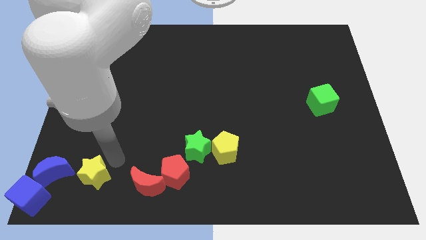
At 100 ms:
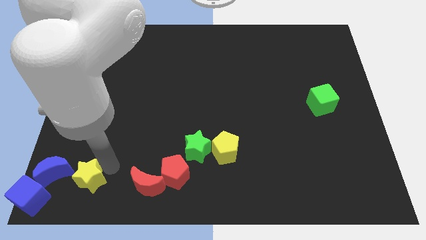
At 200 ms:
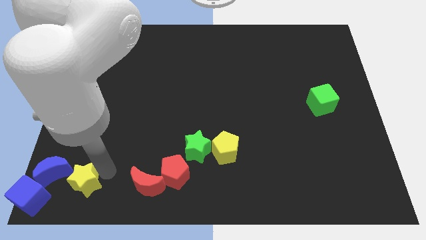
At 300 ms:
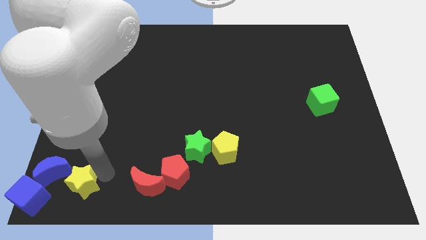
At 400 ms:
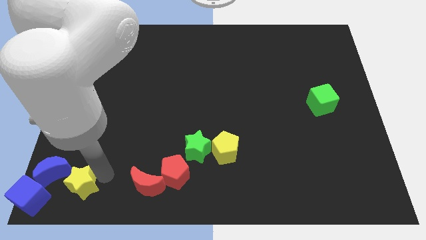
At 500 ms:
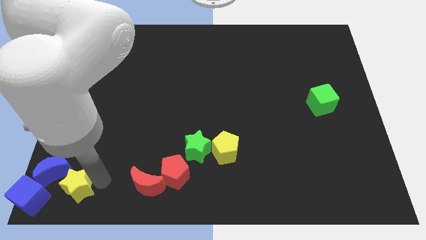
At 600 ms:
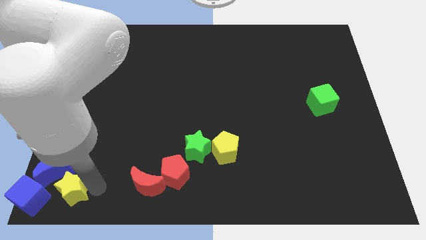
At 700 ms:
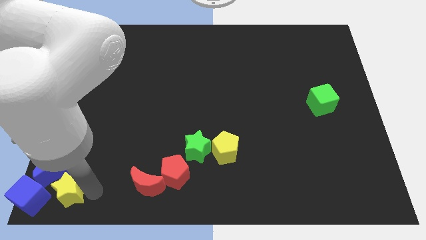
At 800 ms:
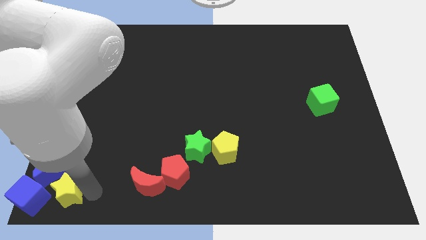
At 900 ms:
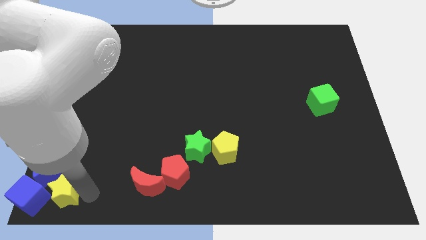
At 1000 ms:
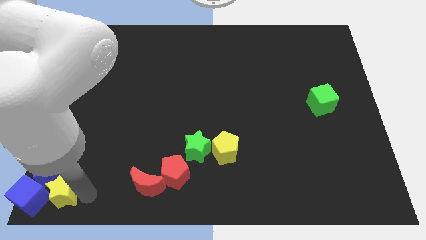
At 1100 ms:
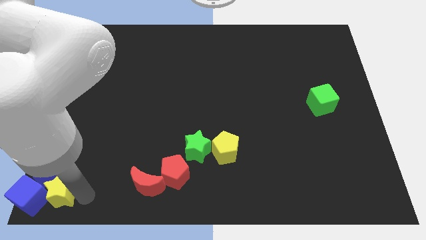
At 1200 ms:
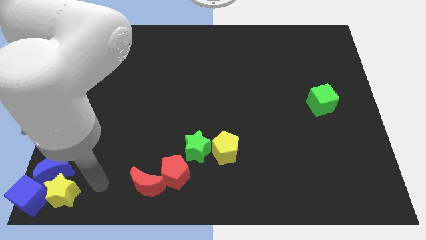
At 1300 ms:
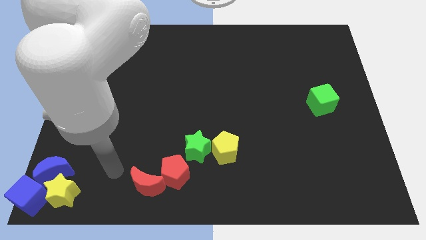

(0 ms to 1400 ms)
place the yellow star at the bottom left corner

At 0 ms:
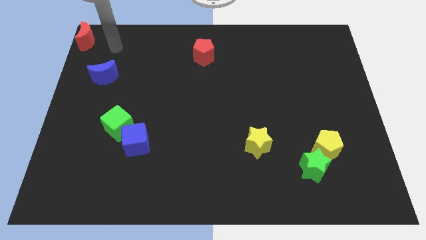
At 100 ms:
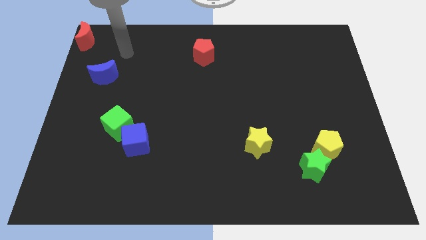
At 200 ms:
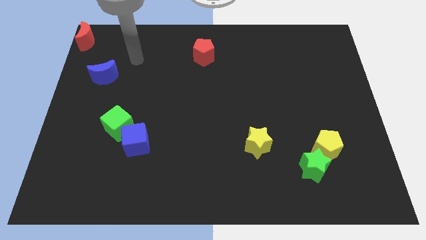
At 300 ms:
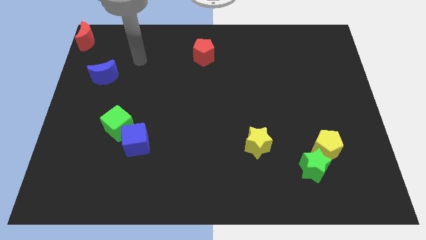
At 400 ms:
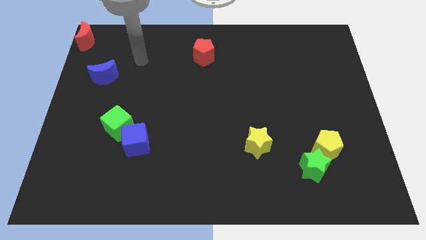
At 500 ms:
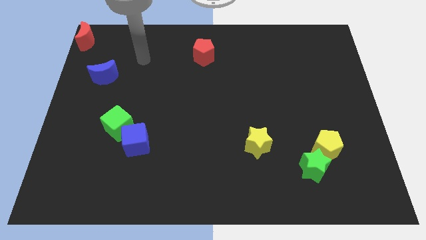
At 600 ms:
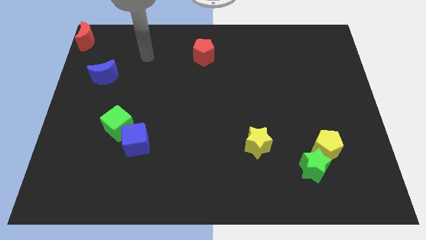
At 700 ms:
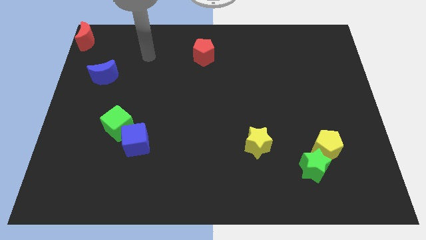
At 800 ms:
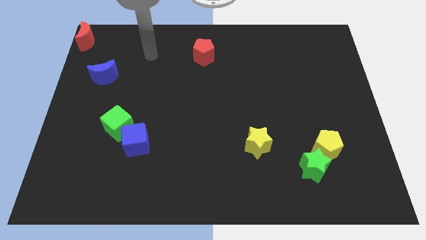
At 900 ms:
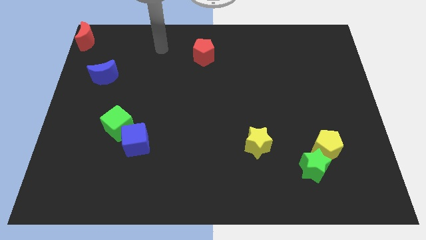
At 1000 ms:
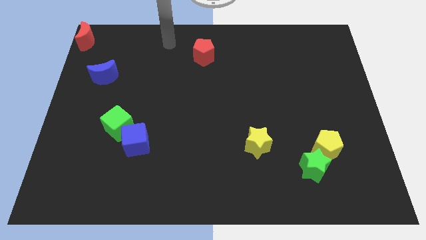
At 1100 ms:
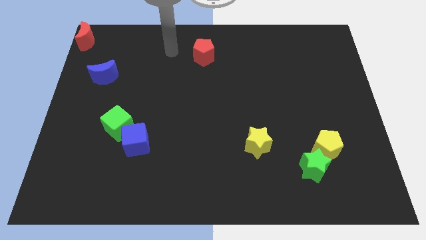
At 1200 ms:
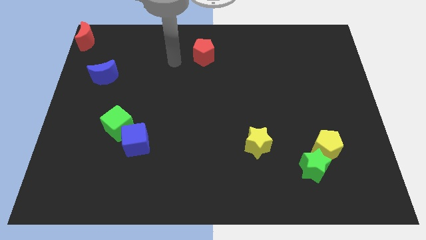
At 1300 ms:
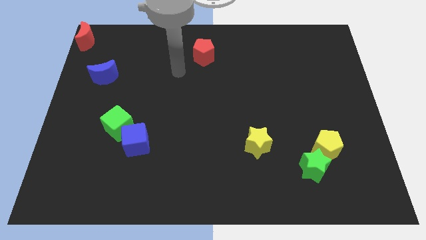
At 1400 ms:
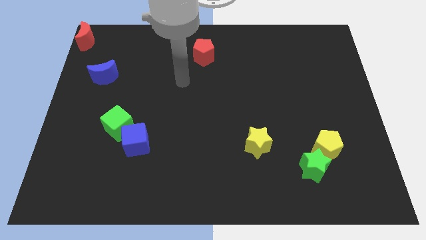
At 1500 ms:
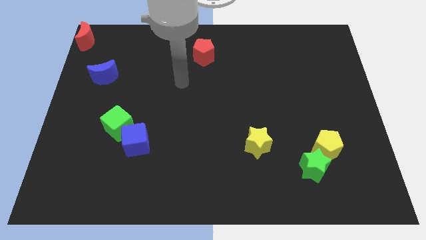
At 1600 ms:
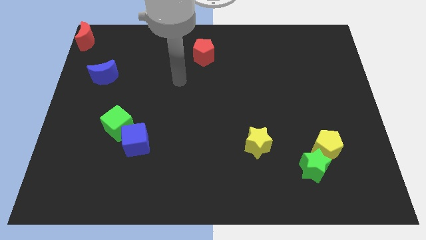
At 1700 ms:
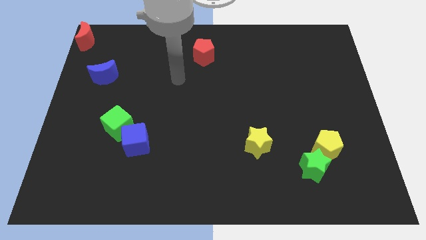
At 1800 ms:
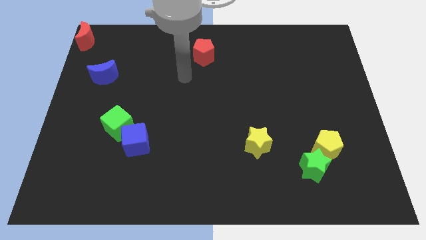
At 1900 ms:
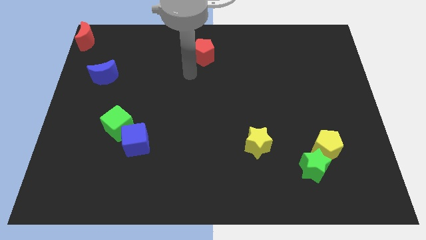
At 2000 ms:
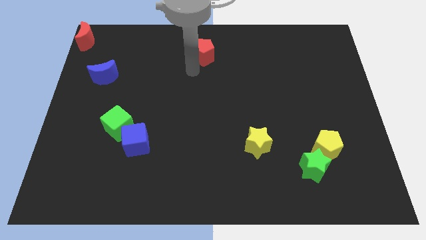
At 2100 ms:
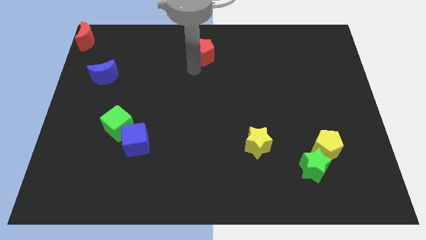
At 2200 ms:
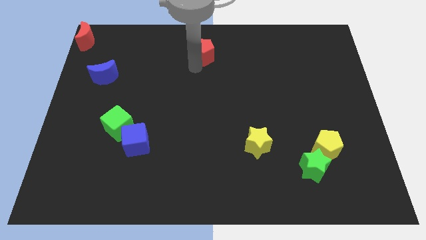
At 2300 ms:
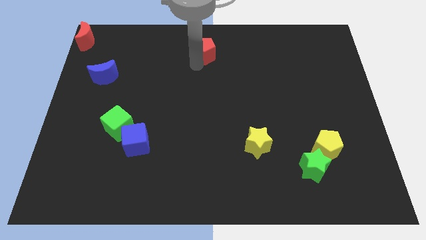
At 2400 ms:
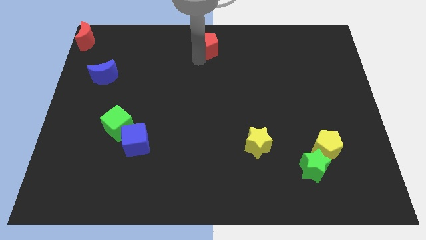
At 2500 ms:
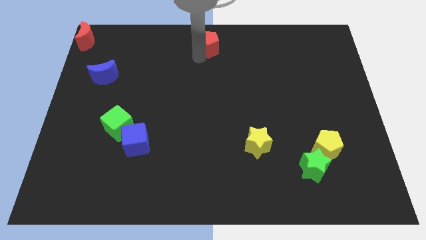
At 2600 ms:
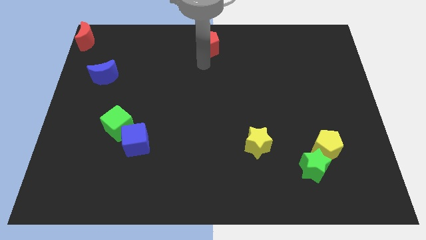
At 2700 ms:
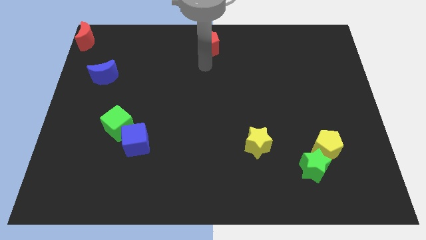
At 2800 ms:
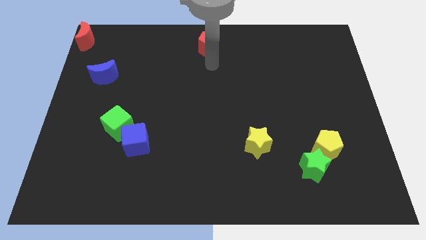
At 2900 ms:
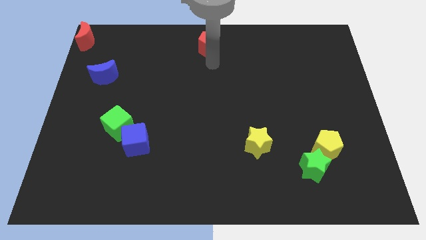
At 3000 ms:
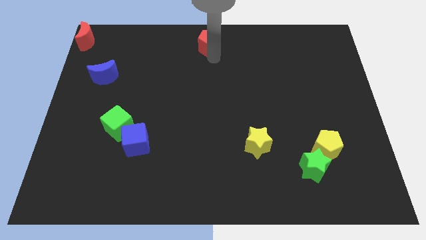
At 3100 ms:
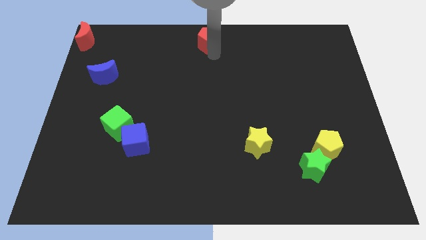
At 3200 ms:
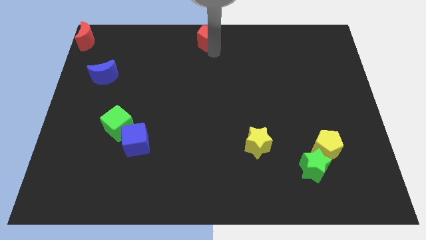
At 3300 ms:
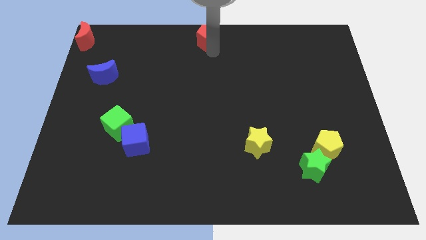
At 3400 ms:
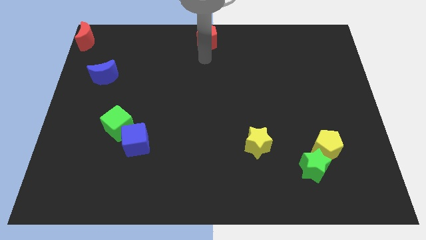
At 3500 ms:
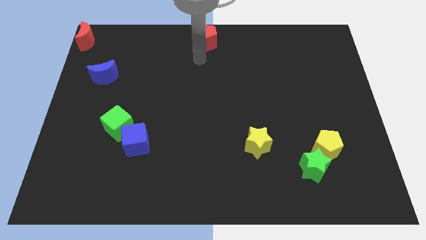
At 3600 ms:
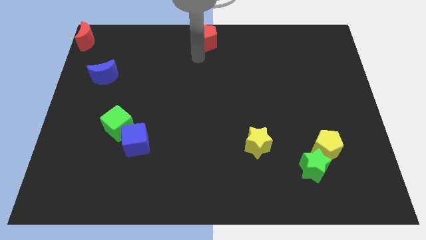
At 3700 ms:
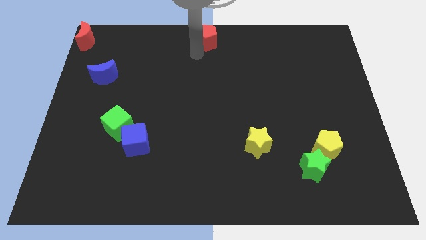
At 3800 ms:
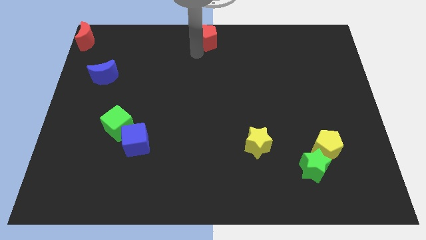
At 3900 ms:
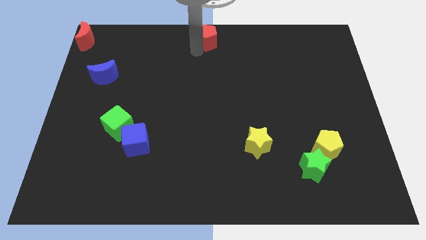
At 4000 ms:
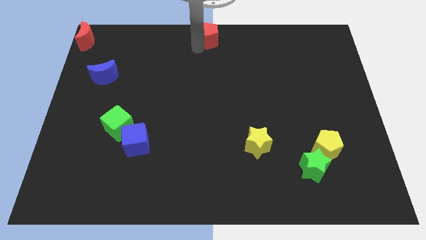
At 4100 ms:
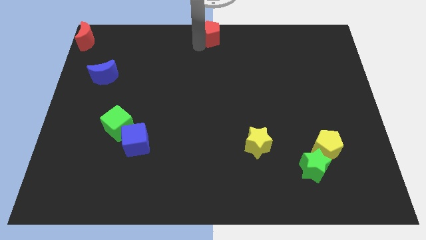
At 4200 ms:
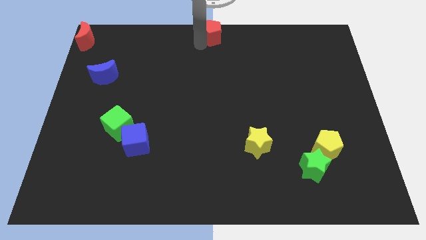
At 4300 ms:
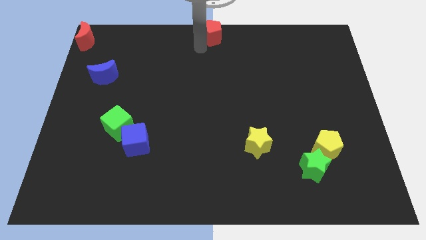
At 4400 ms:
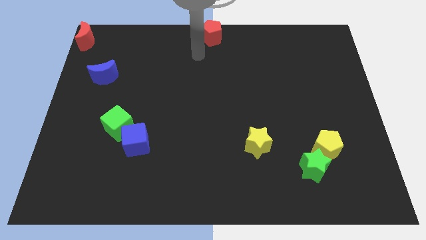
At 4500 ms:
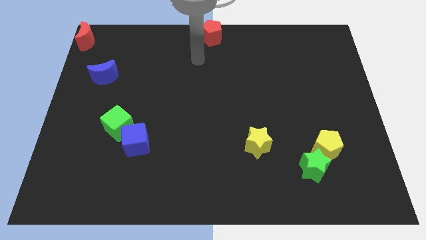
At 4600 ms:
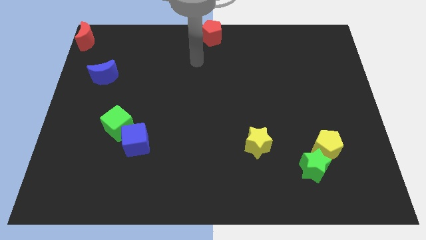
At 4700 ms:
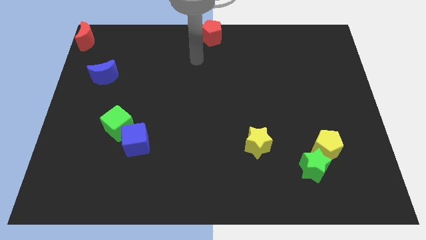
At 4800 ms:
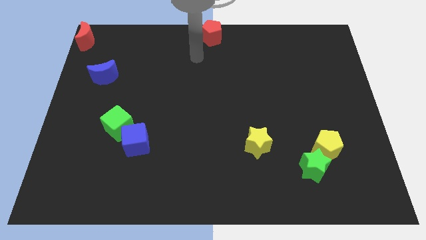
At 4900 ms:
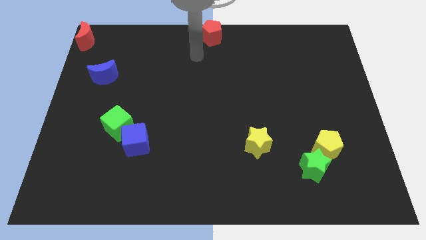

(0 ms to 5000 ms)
move the red pentagon to the top center of the board

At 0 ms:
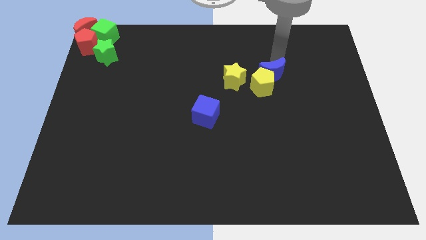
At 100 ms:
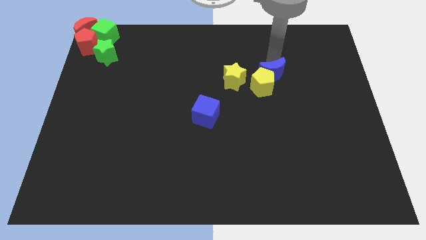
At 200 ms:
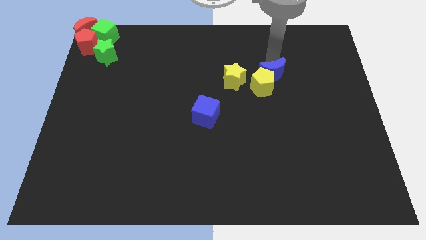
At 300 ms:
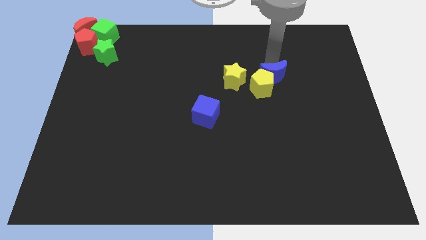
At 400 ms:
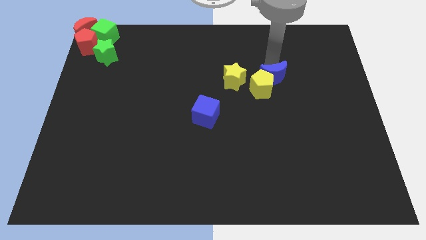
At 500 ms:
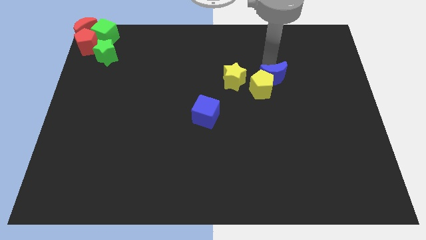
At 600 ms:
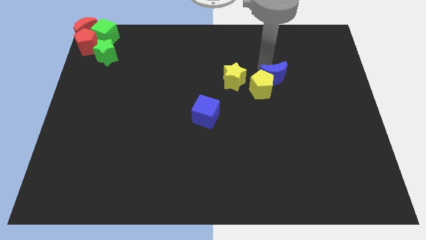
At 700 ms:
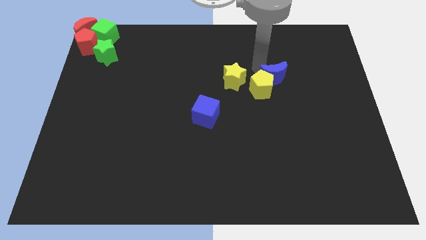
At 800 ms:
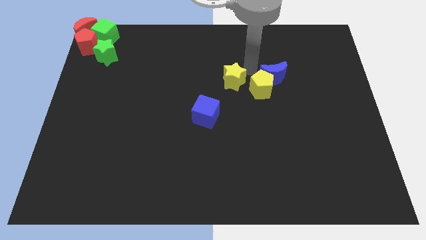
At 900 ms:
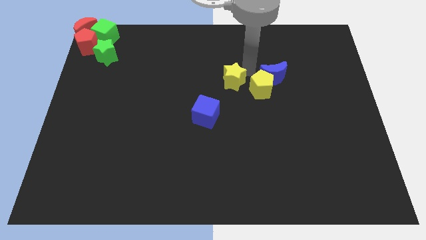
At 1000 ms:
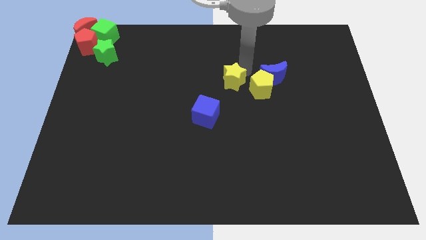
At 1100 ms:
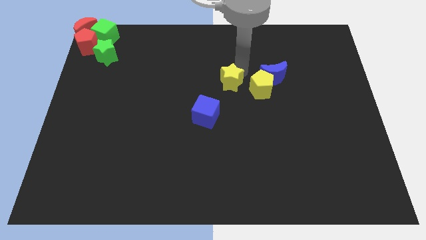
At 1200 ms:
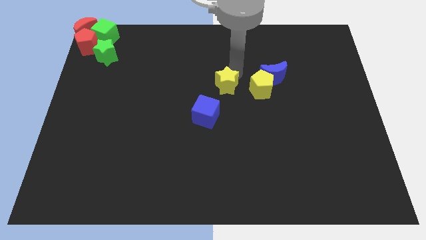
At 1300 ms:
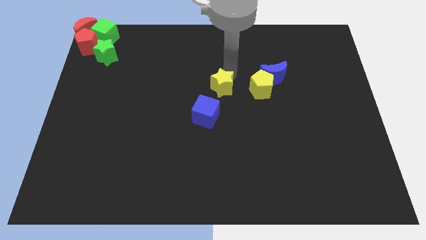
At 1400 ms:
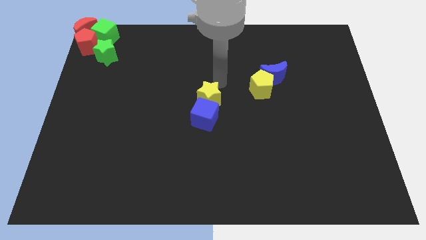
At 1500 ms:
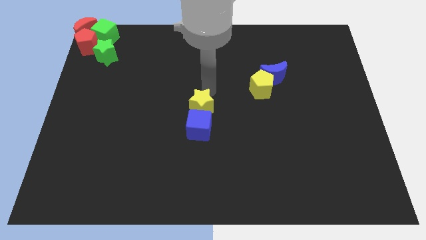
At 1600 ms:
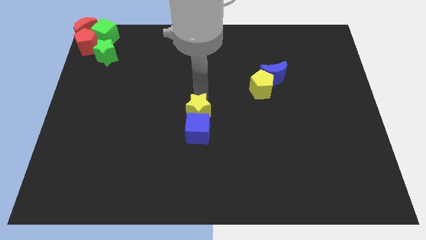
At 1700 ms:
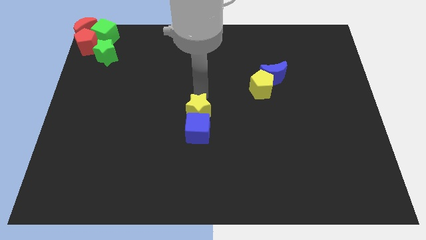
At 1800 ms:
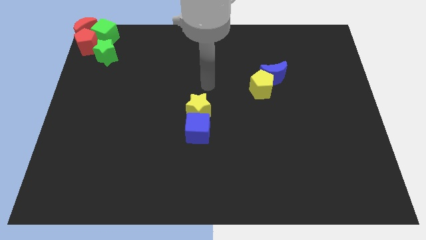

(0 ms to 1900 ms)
place the yellow star into the blue cube

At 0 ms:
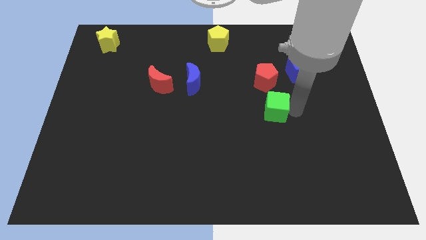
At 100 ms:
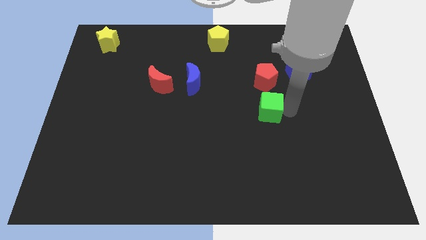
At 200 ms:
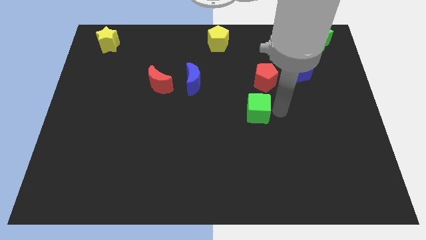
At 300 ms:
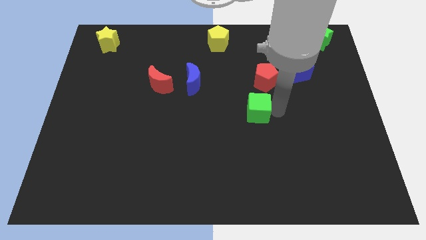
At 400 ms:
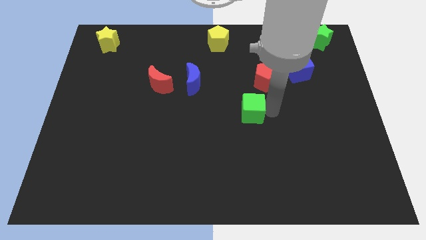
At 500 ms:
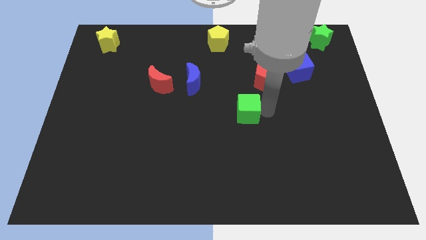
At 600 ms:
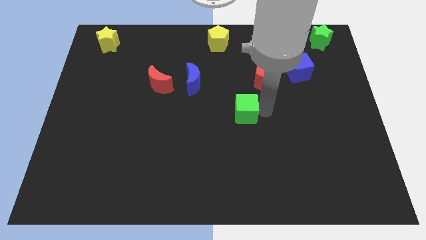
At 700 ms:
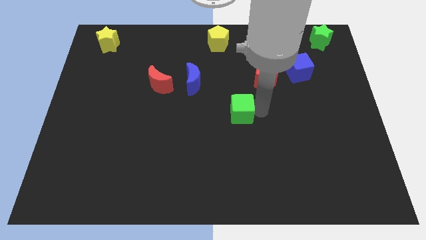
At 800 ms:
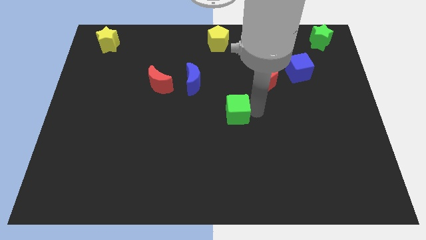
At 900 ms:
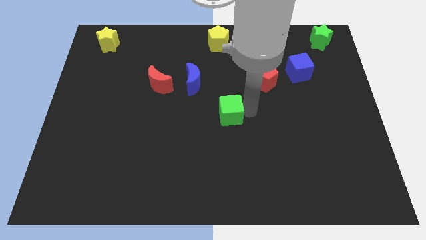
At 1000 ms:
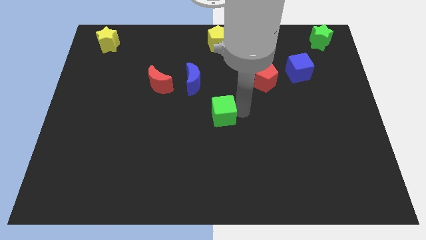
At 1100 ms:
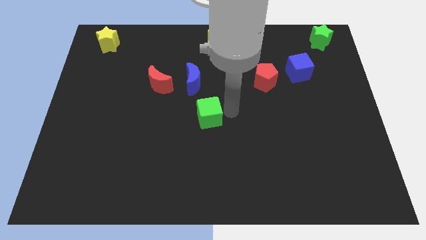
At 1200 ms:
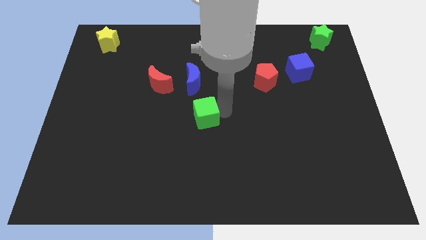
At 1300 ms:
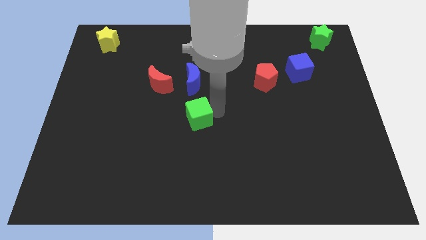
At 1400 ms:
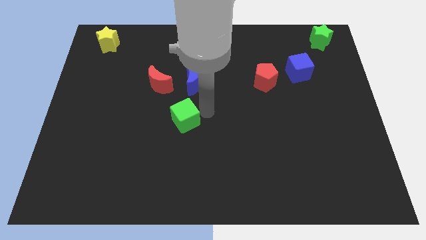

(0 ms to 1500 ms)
slide the green cube slightly to the left
